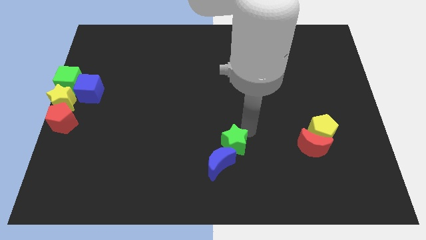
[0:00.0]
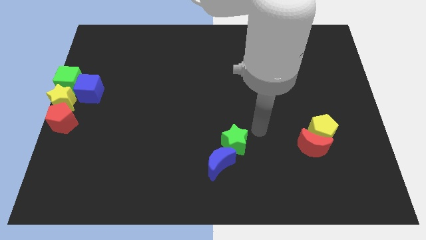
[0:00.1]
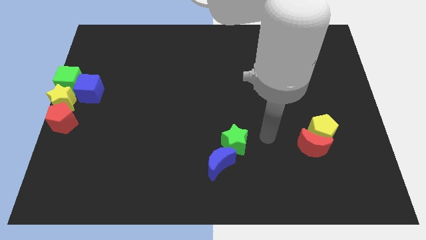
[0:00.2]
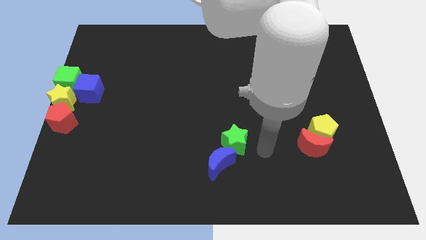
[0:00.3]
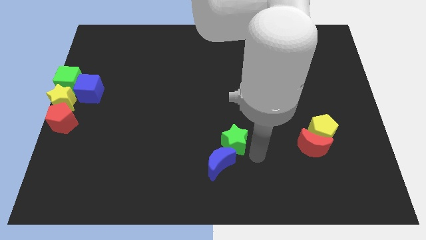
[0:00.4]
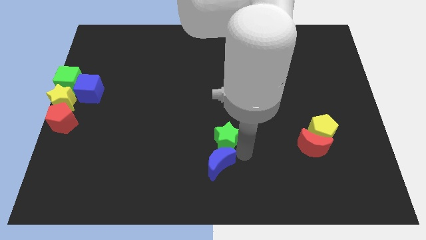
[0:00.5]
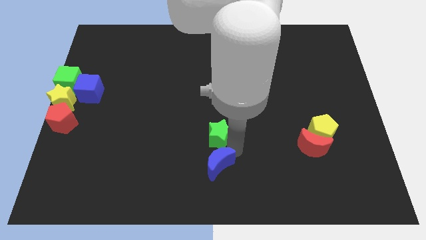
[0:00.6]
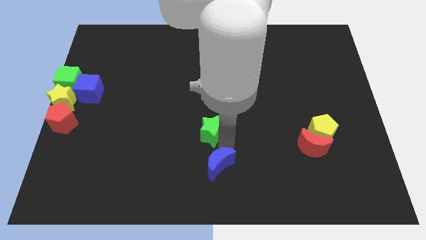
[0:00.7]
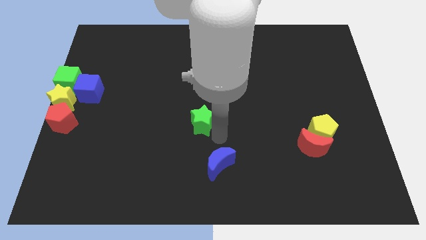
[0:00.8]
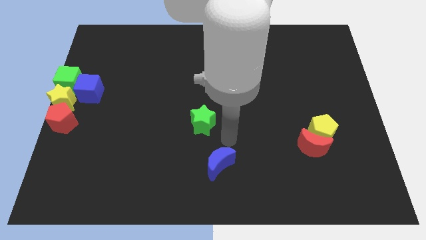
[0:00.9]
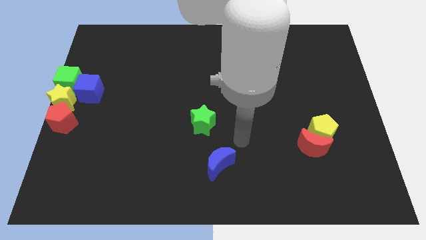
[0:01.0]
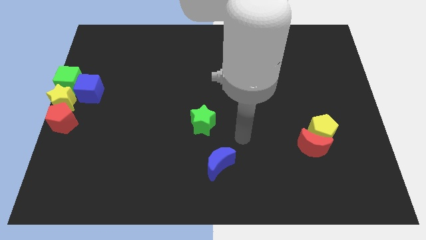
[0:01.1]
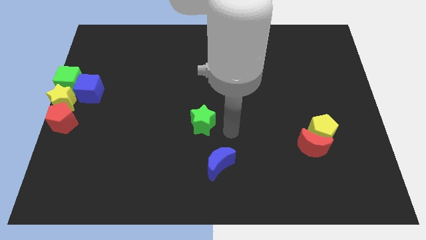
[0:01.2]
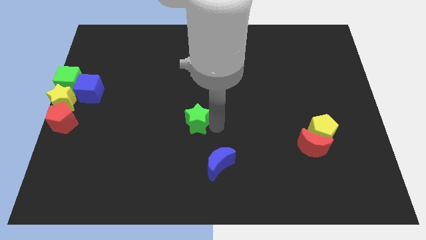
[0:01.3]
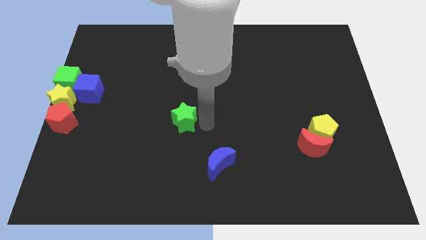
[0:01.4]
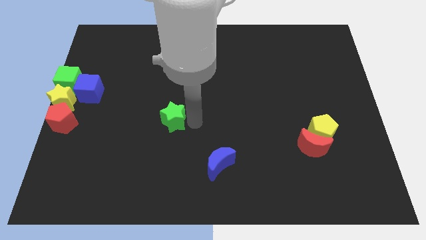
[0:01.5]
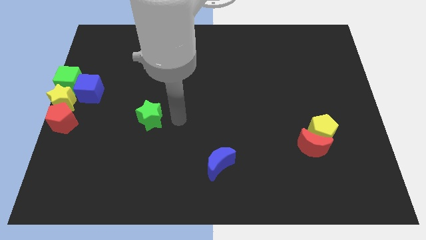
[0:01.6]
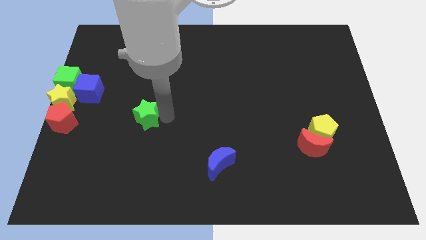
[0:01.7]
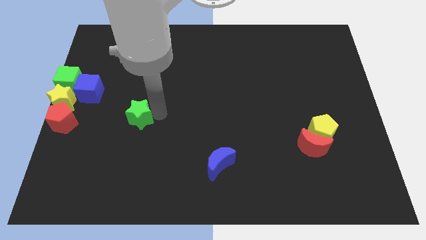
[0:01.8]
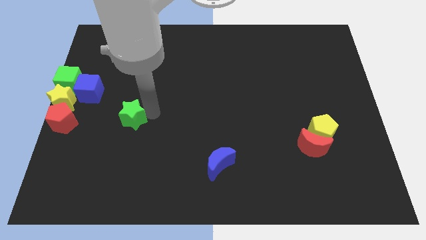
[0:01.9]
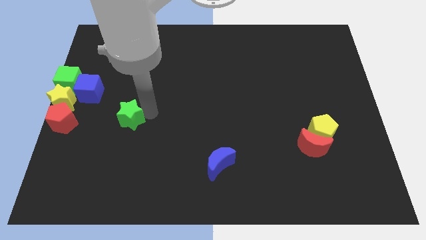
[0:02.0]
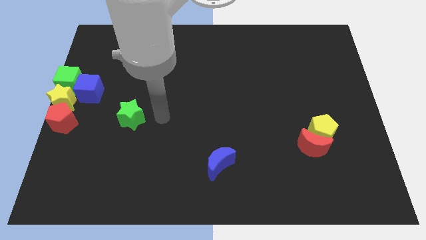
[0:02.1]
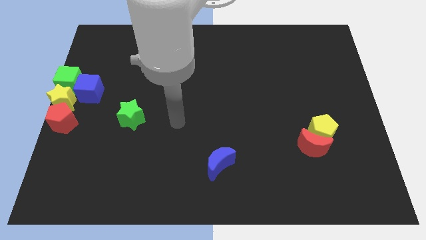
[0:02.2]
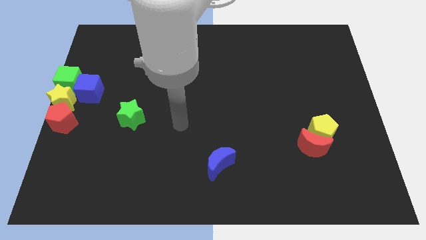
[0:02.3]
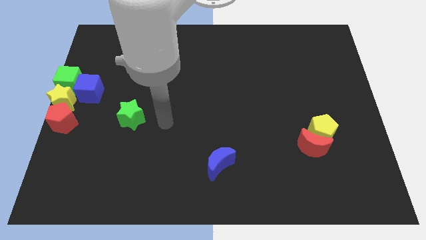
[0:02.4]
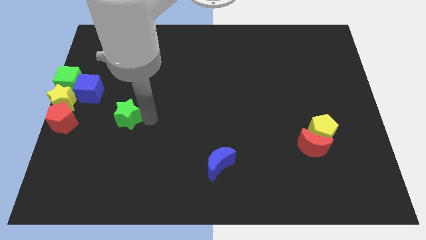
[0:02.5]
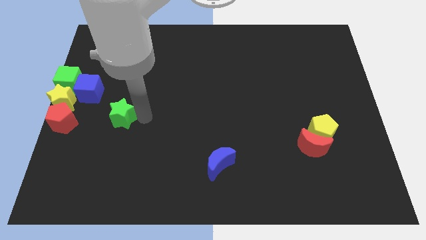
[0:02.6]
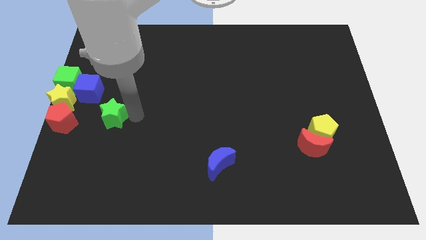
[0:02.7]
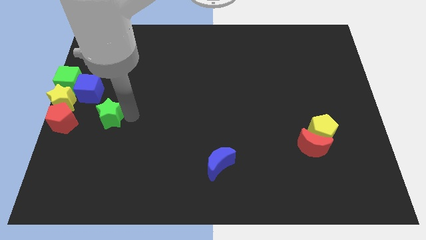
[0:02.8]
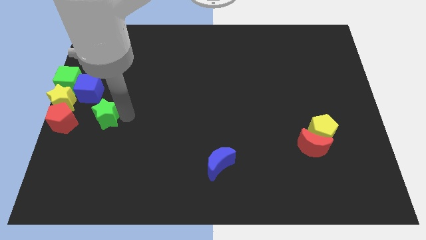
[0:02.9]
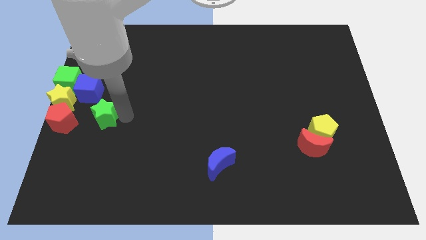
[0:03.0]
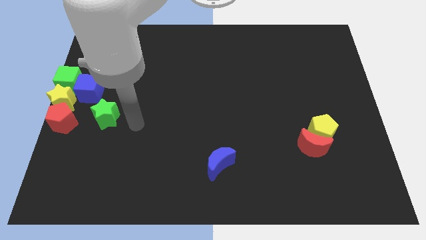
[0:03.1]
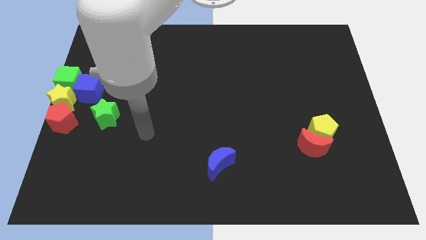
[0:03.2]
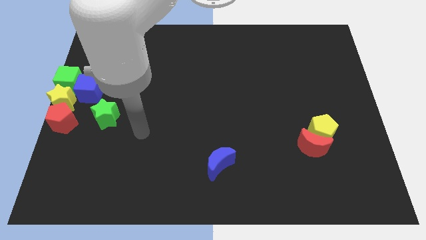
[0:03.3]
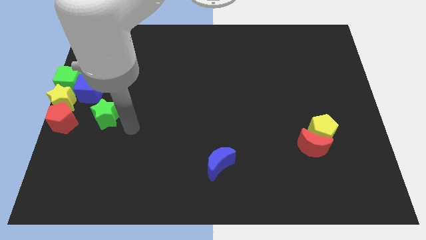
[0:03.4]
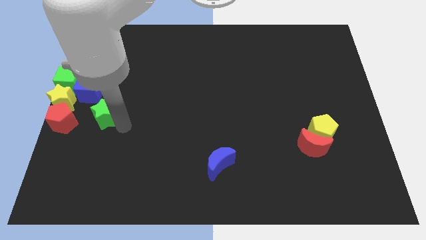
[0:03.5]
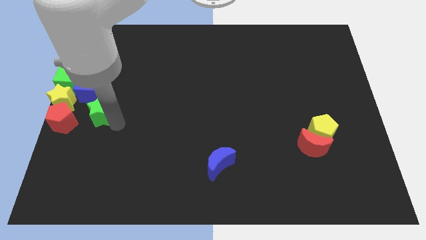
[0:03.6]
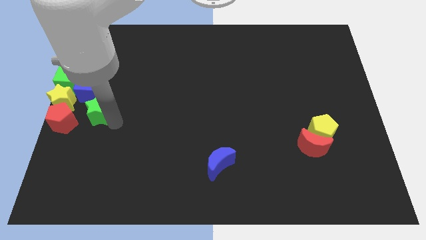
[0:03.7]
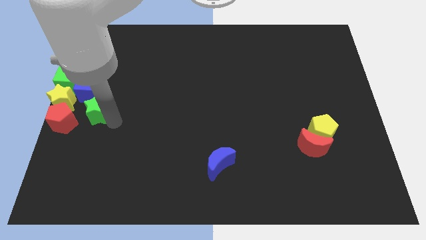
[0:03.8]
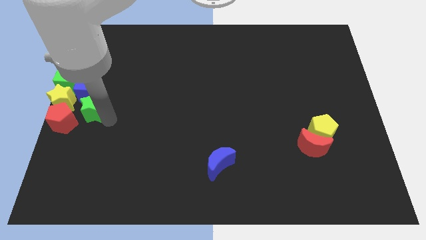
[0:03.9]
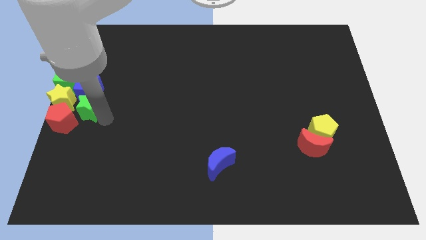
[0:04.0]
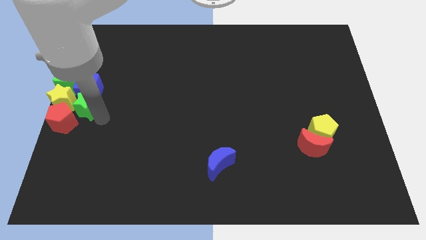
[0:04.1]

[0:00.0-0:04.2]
place the green star right to the yellow star

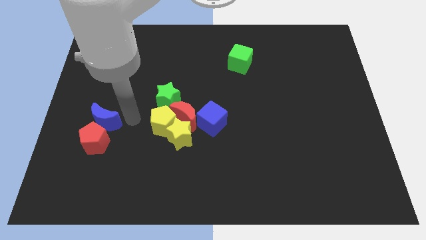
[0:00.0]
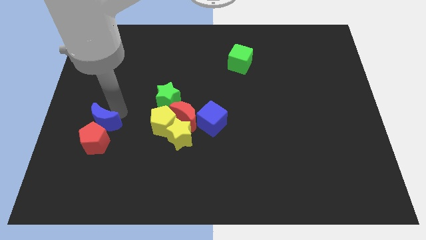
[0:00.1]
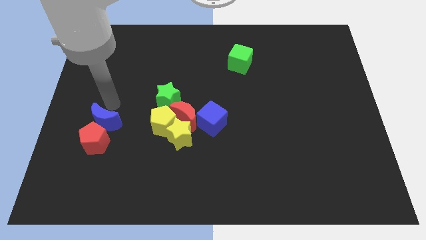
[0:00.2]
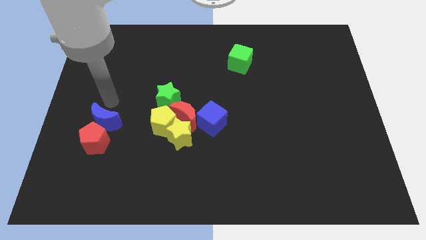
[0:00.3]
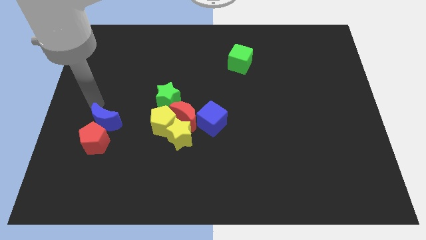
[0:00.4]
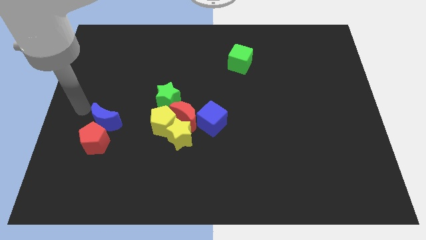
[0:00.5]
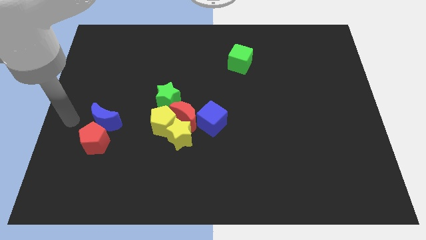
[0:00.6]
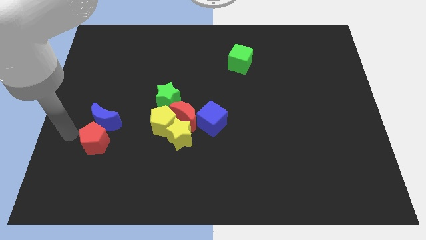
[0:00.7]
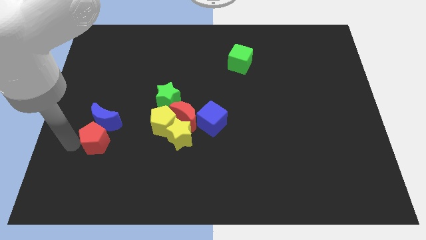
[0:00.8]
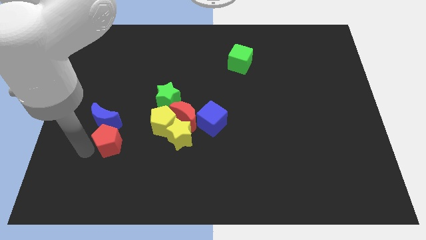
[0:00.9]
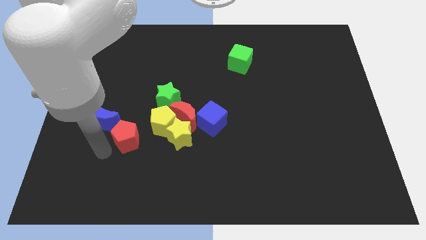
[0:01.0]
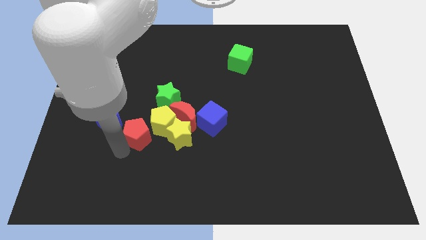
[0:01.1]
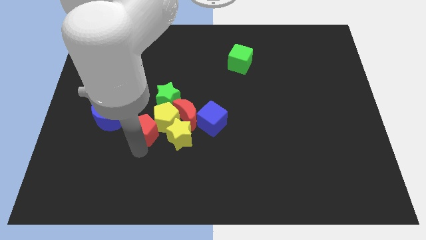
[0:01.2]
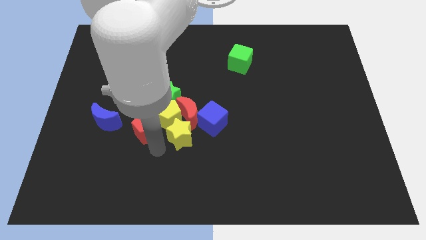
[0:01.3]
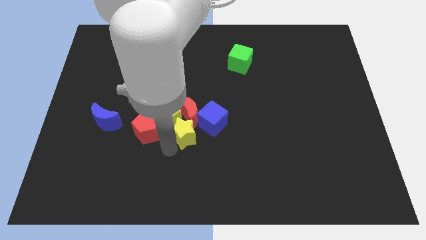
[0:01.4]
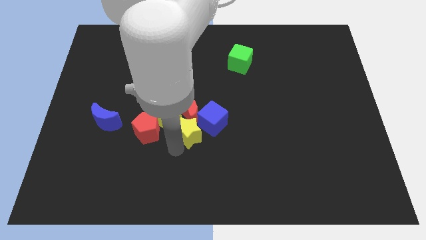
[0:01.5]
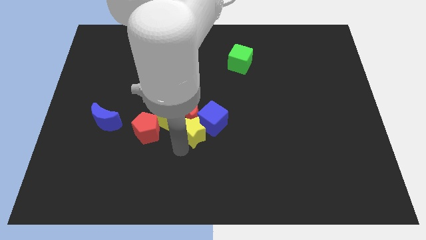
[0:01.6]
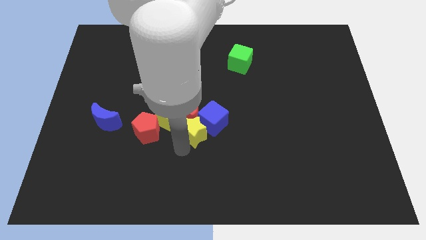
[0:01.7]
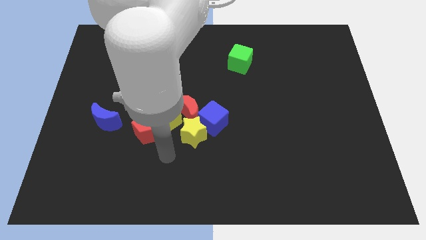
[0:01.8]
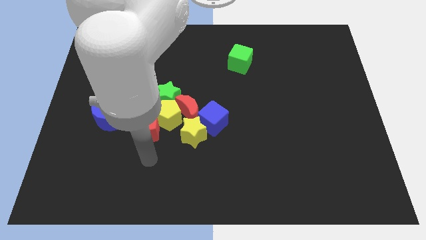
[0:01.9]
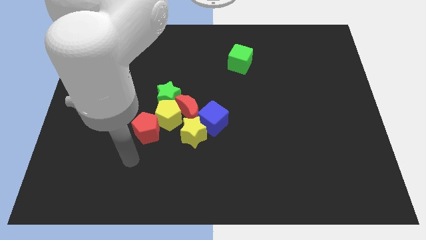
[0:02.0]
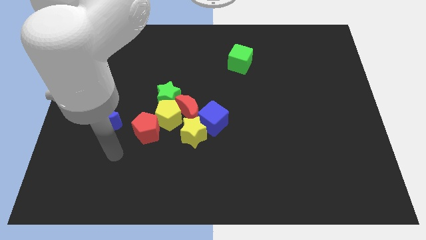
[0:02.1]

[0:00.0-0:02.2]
move the red pentagon into the yellow pentagon

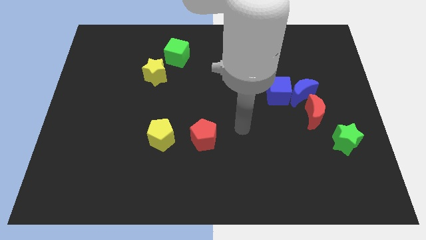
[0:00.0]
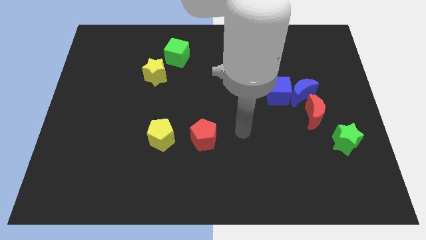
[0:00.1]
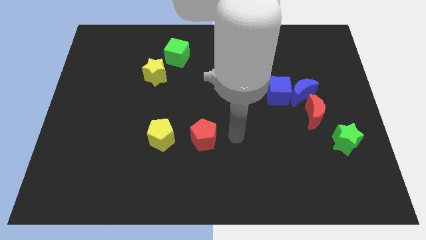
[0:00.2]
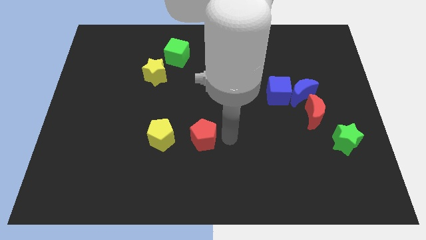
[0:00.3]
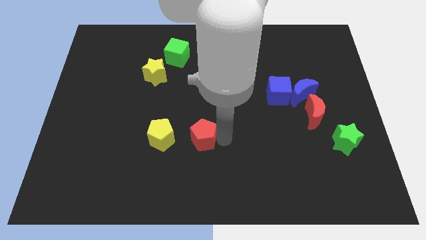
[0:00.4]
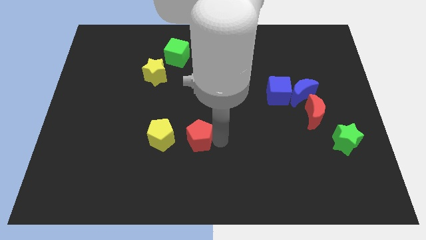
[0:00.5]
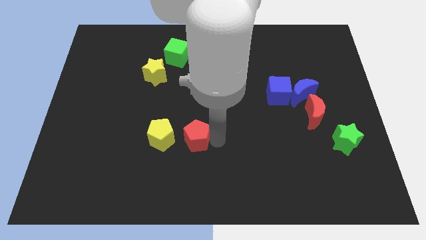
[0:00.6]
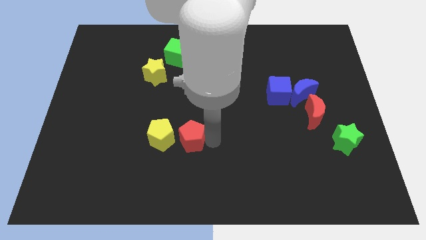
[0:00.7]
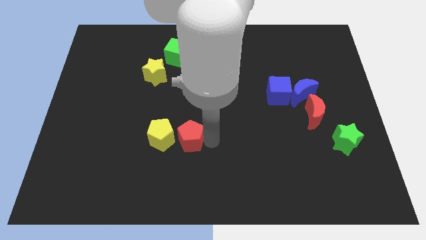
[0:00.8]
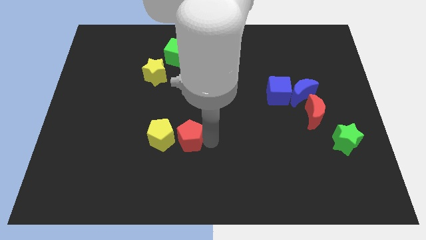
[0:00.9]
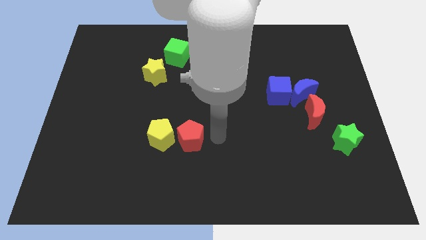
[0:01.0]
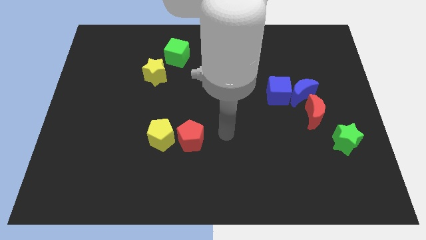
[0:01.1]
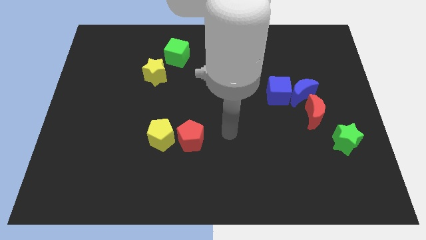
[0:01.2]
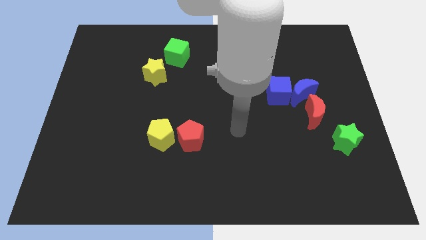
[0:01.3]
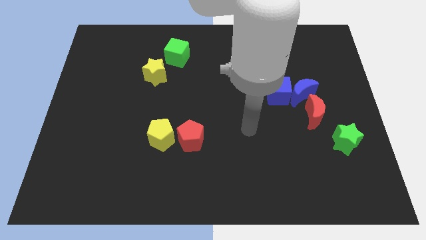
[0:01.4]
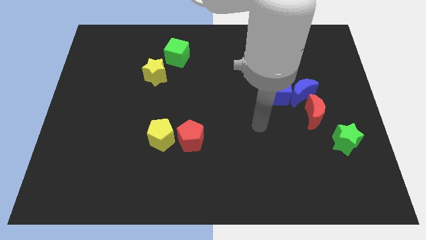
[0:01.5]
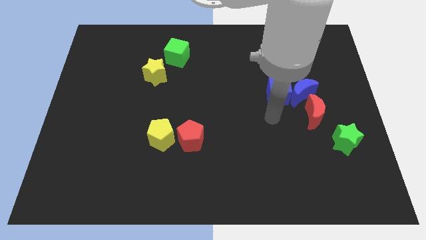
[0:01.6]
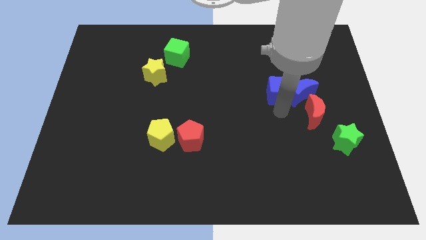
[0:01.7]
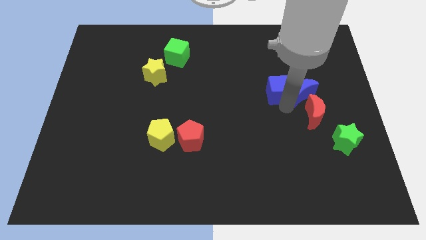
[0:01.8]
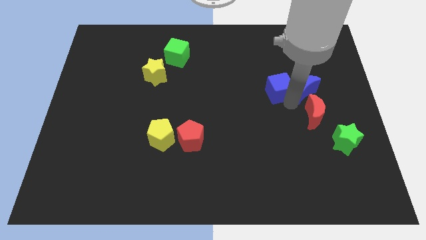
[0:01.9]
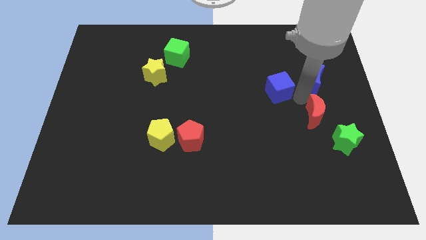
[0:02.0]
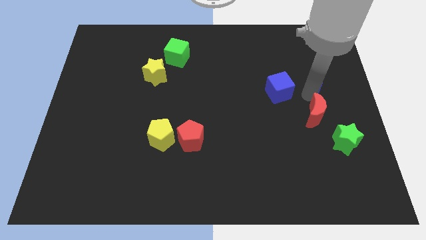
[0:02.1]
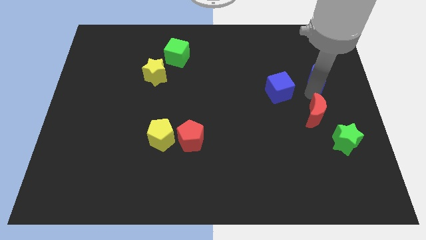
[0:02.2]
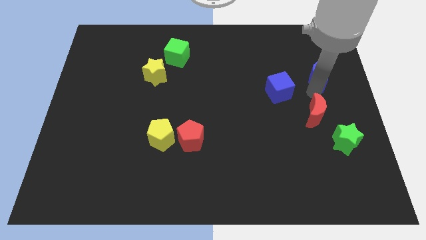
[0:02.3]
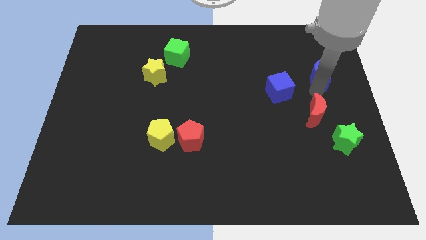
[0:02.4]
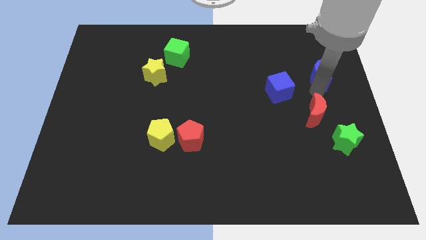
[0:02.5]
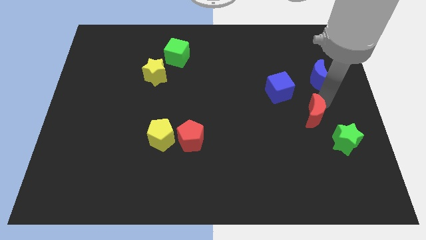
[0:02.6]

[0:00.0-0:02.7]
push the blue crescent slightly towards the right side of the board
